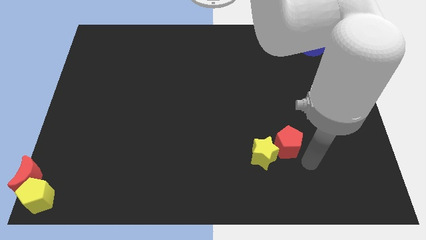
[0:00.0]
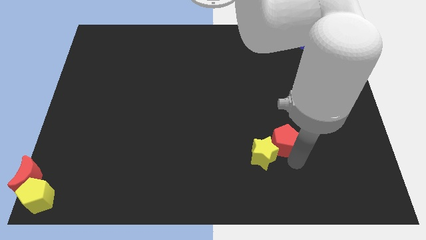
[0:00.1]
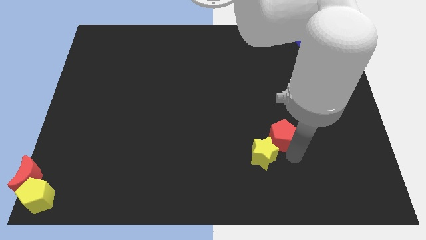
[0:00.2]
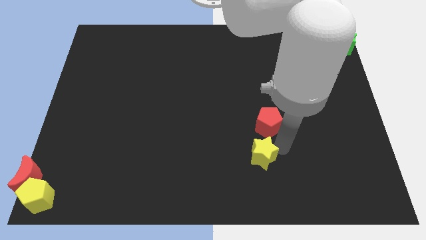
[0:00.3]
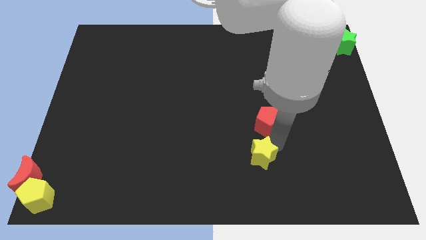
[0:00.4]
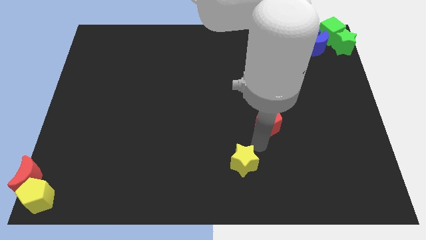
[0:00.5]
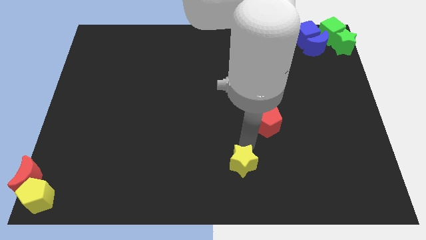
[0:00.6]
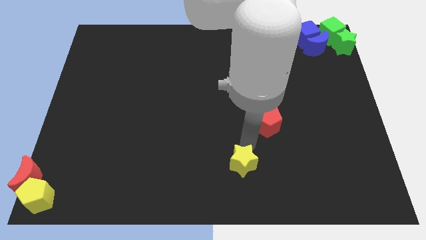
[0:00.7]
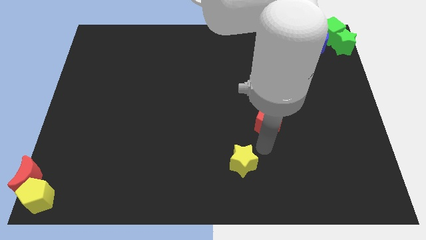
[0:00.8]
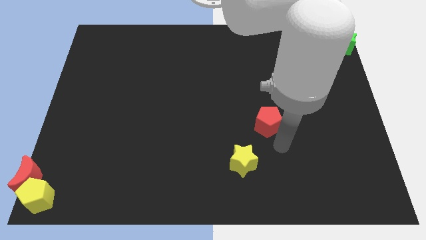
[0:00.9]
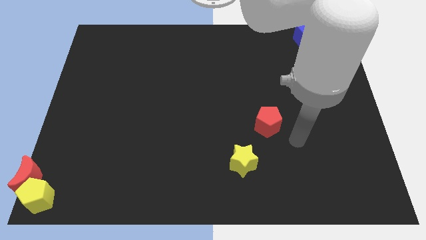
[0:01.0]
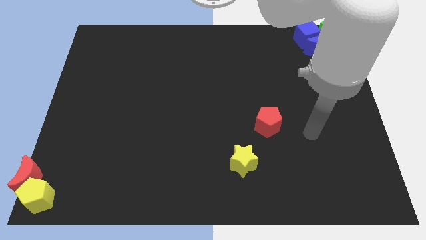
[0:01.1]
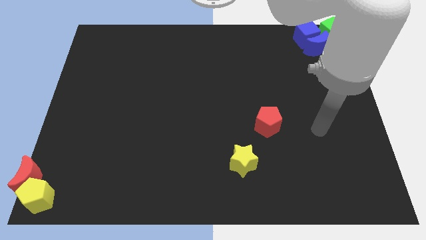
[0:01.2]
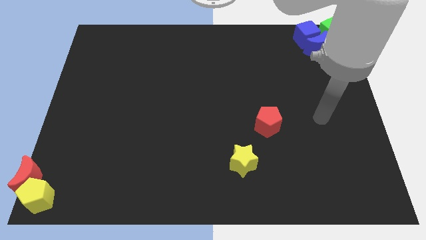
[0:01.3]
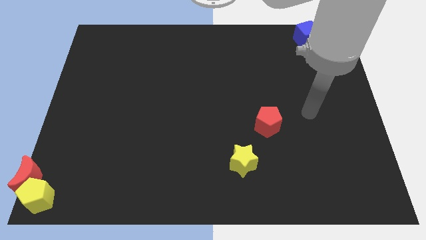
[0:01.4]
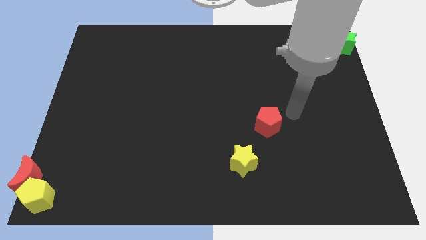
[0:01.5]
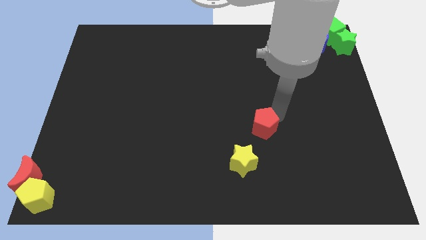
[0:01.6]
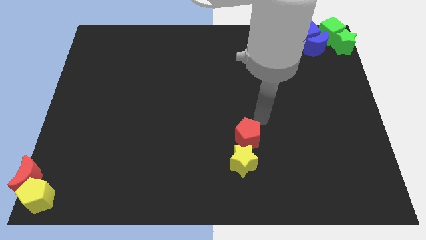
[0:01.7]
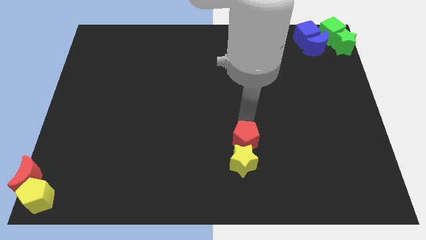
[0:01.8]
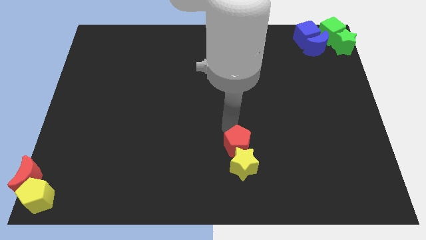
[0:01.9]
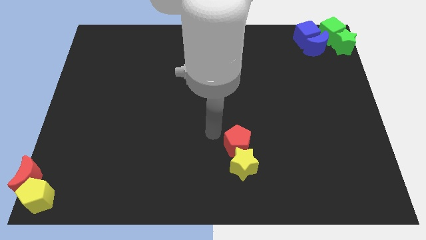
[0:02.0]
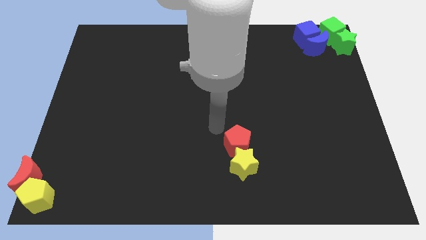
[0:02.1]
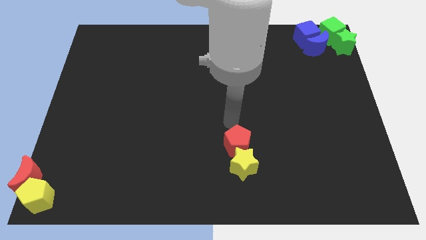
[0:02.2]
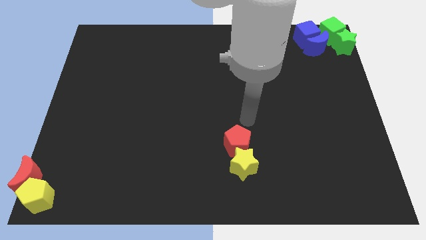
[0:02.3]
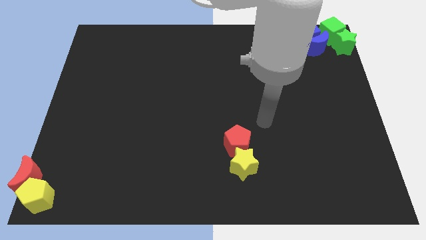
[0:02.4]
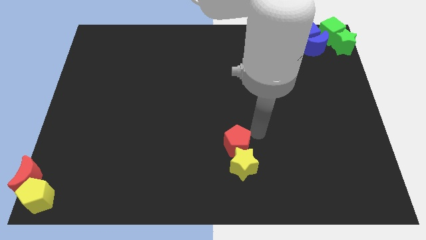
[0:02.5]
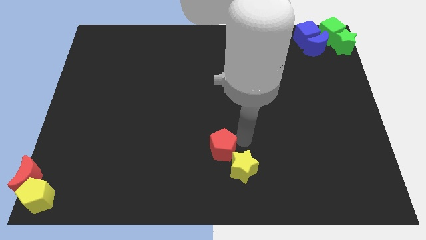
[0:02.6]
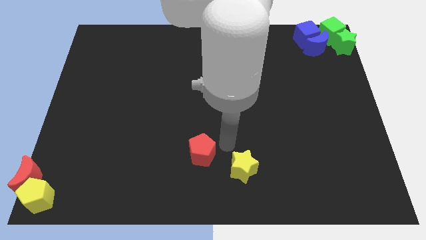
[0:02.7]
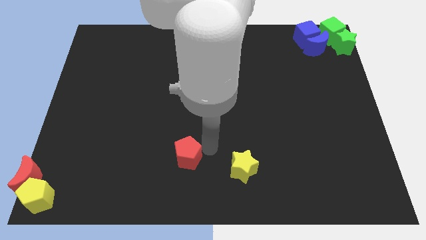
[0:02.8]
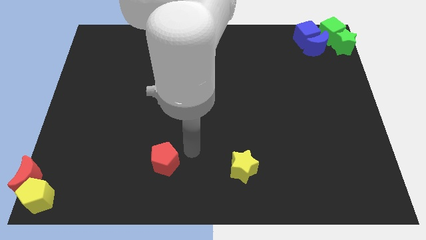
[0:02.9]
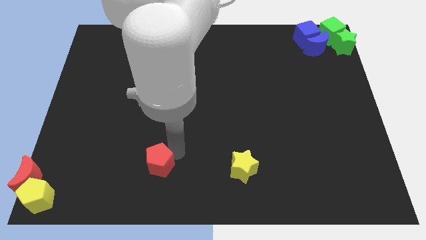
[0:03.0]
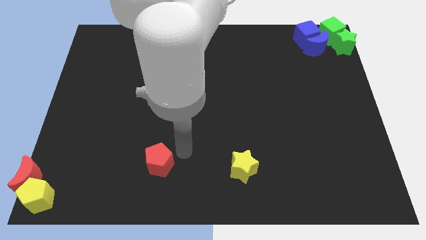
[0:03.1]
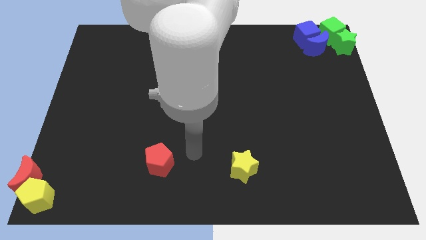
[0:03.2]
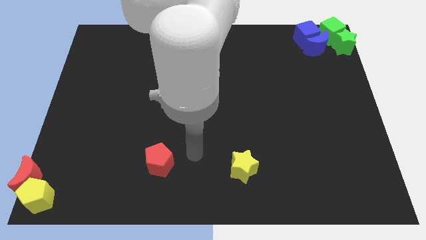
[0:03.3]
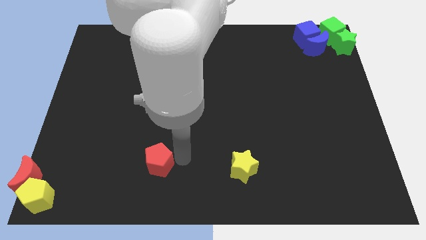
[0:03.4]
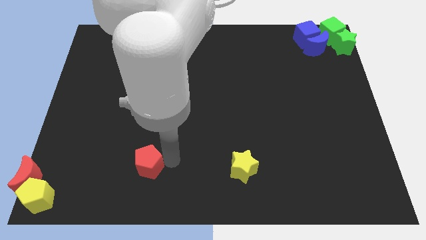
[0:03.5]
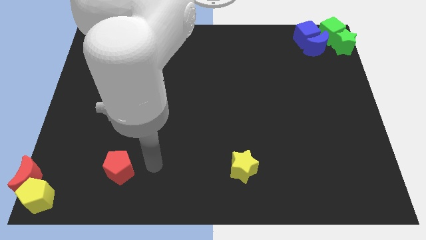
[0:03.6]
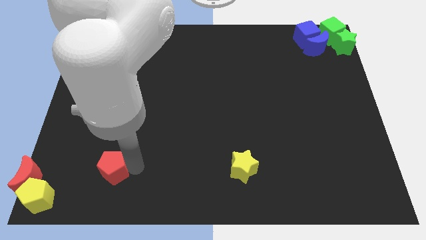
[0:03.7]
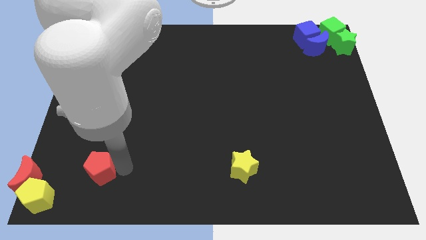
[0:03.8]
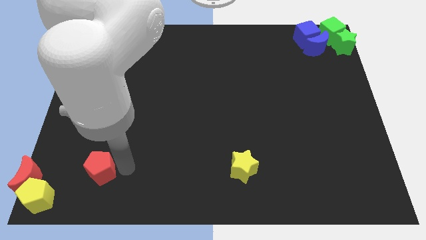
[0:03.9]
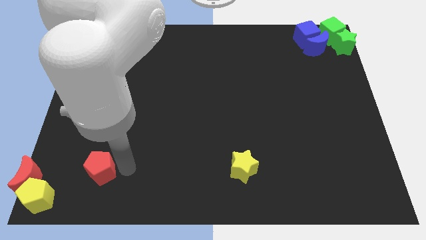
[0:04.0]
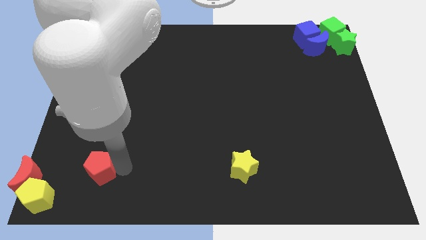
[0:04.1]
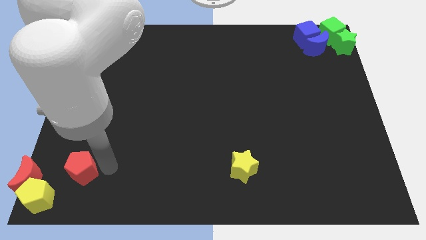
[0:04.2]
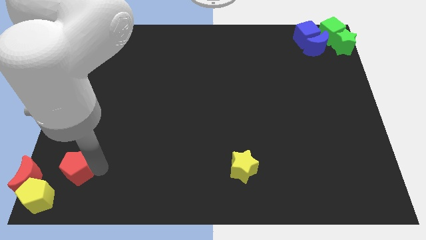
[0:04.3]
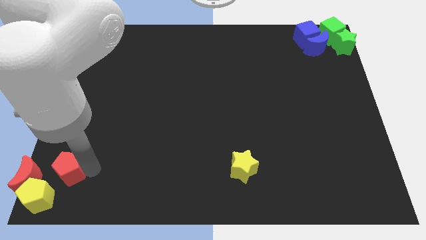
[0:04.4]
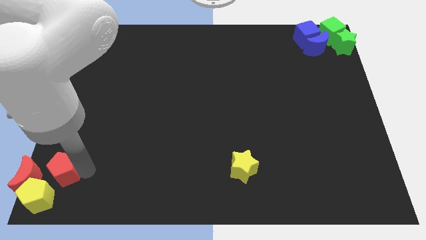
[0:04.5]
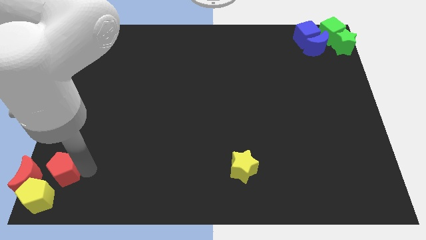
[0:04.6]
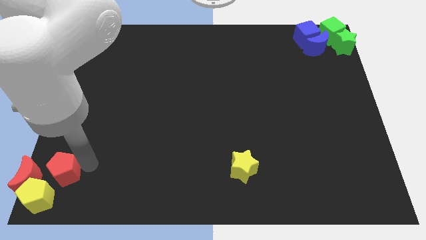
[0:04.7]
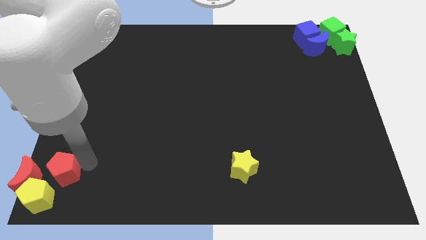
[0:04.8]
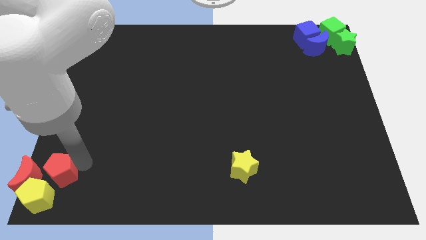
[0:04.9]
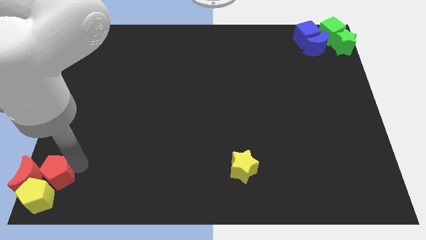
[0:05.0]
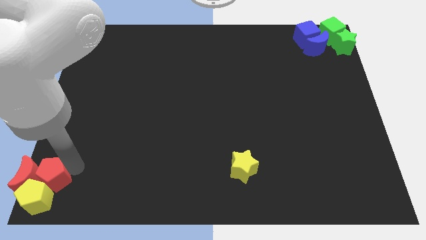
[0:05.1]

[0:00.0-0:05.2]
push the red pentagon towards the red crescent

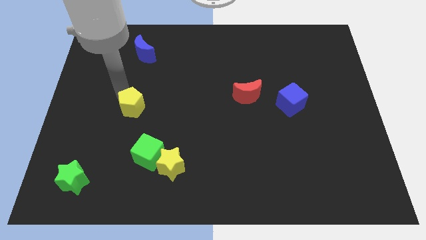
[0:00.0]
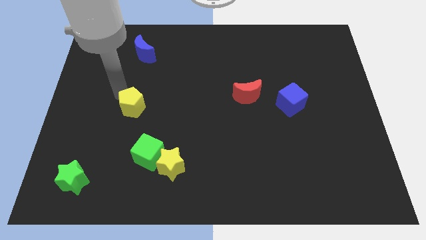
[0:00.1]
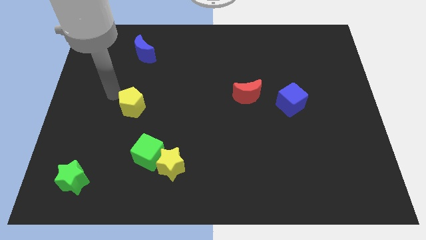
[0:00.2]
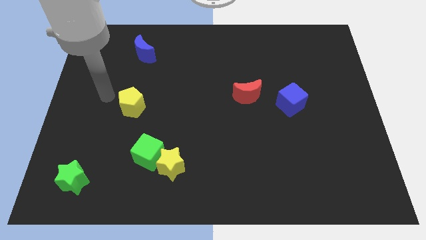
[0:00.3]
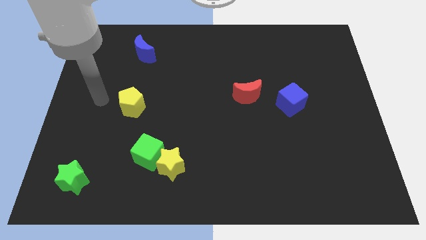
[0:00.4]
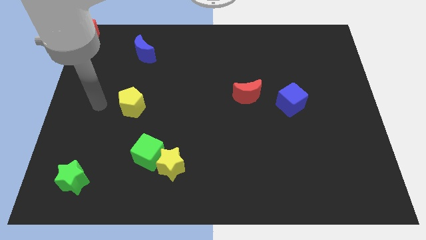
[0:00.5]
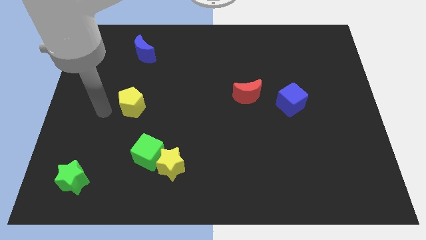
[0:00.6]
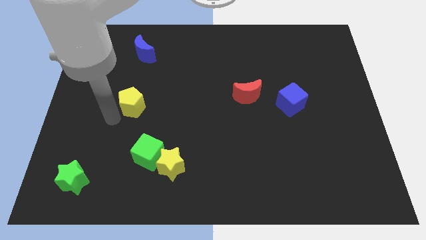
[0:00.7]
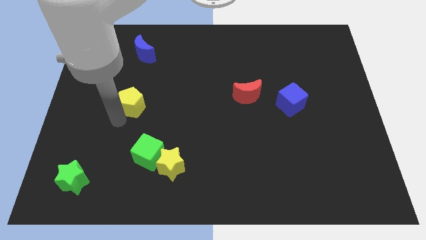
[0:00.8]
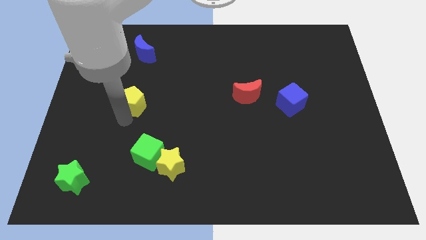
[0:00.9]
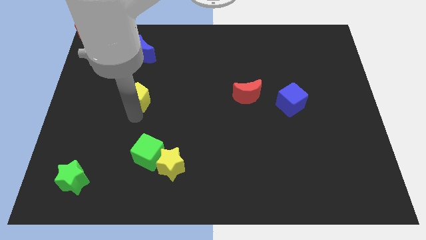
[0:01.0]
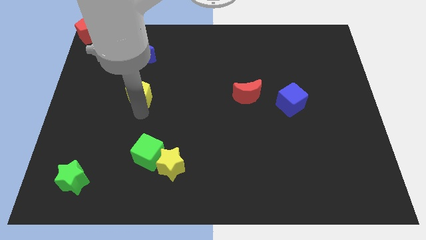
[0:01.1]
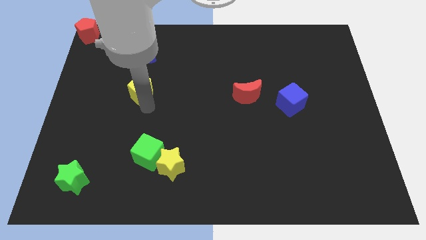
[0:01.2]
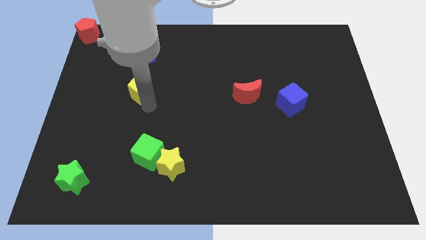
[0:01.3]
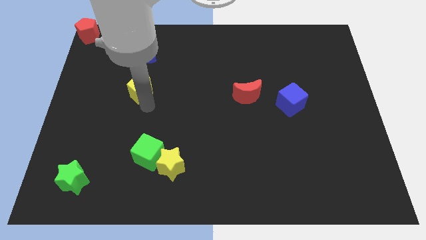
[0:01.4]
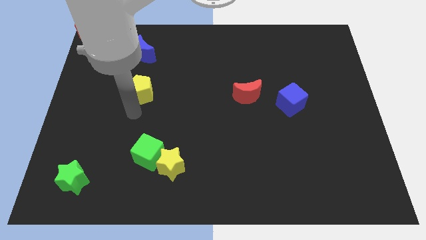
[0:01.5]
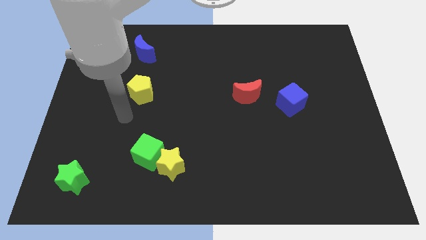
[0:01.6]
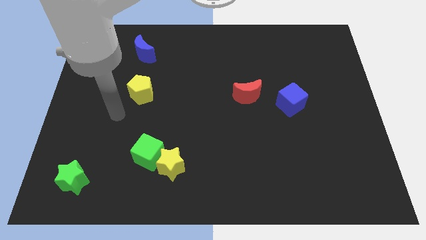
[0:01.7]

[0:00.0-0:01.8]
place the yellow pentagon in between blue crescent and green cube

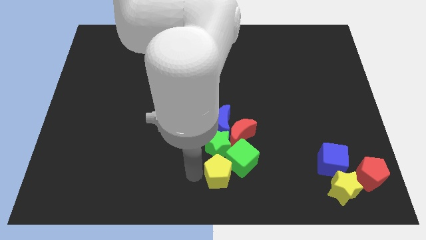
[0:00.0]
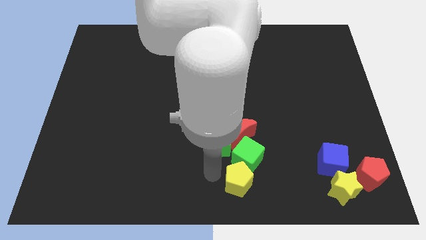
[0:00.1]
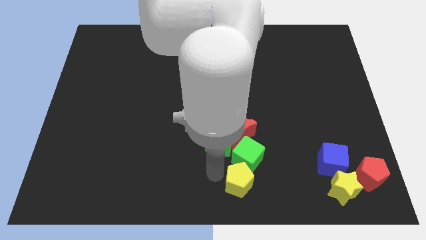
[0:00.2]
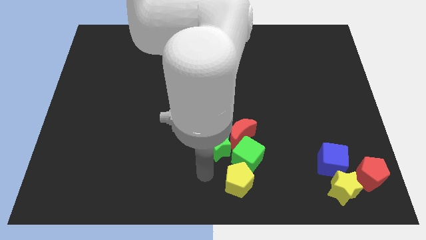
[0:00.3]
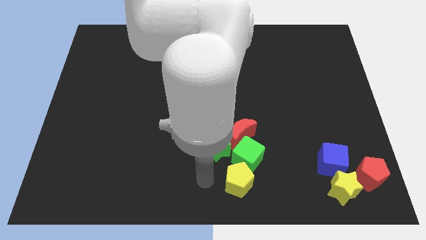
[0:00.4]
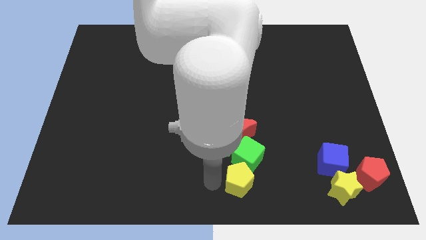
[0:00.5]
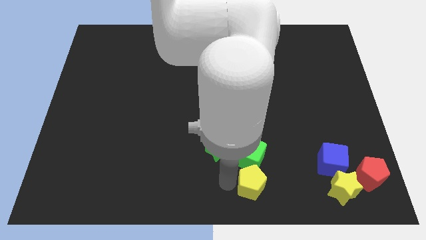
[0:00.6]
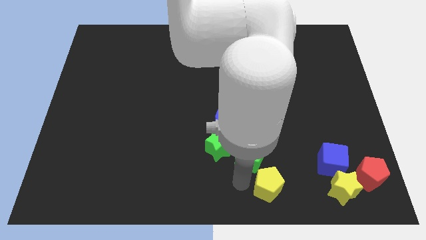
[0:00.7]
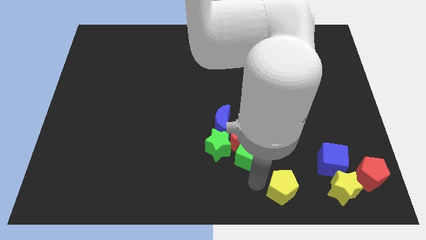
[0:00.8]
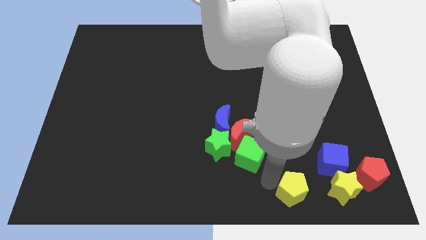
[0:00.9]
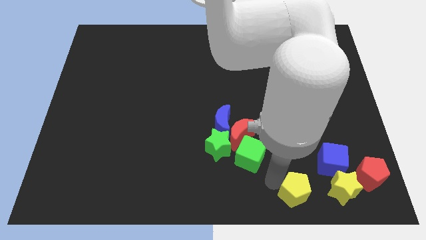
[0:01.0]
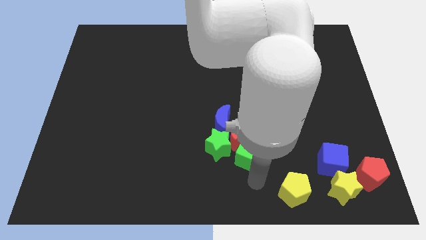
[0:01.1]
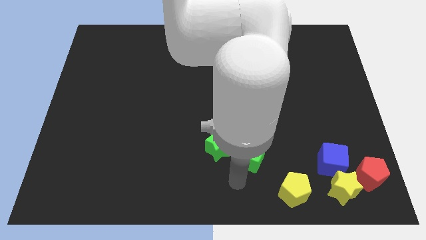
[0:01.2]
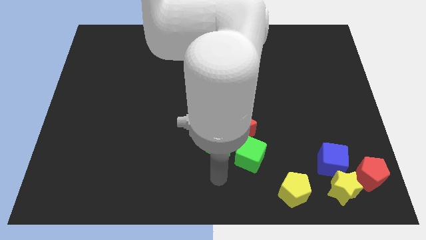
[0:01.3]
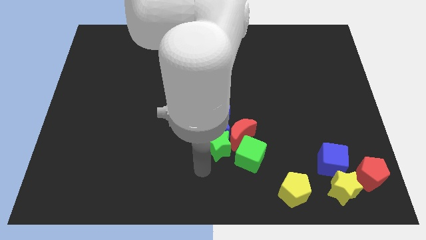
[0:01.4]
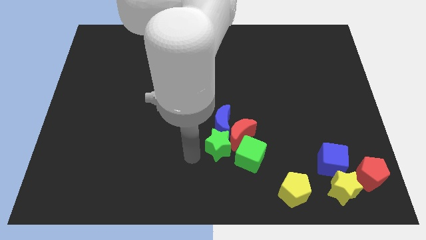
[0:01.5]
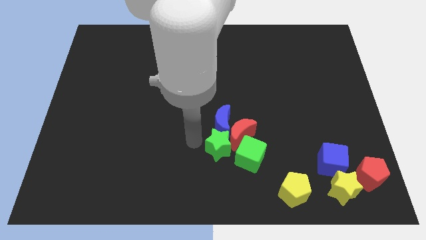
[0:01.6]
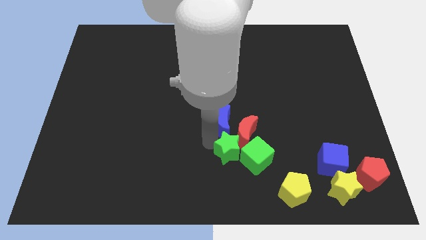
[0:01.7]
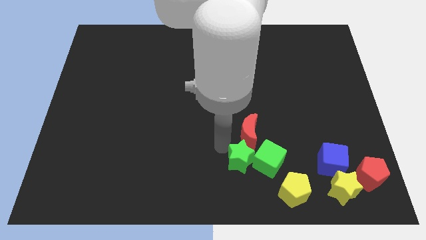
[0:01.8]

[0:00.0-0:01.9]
push the yellow pentagon towards the yellow star
